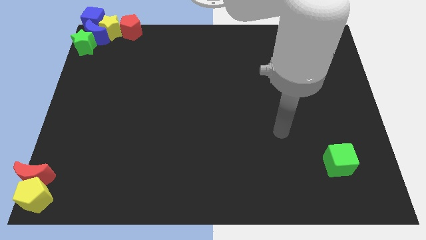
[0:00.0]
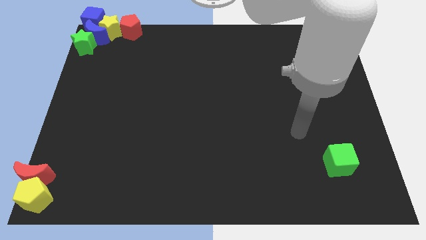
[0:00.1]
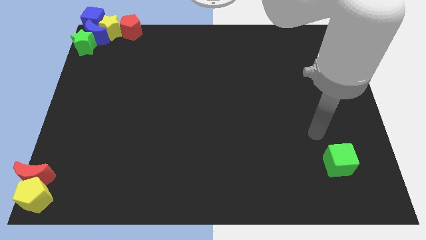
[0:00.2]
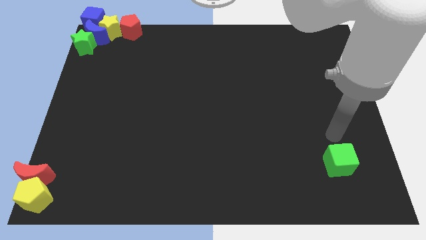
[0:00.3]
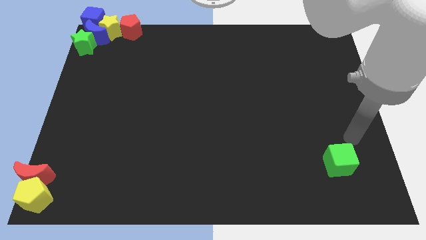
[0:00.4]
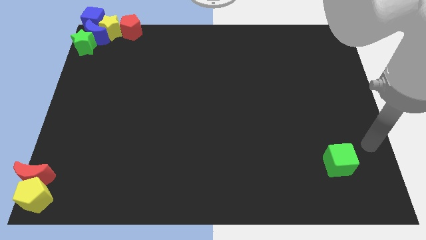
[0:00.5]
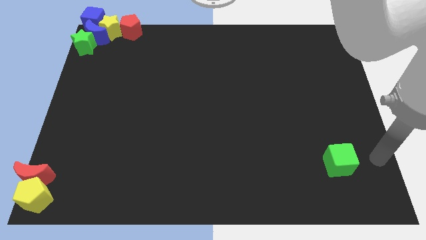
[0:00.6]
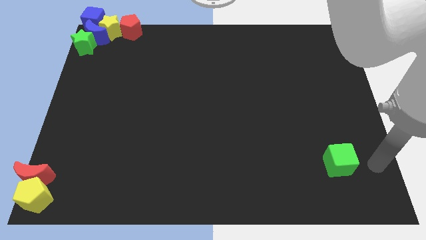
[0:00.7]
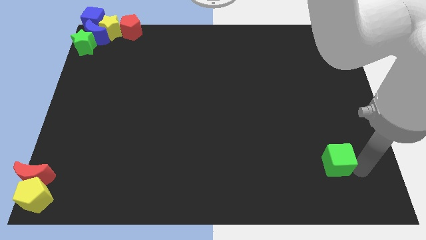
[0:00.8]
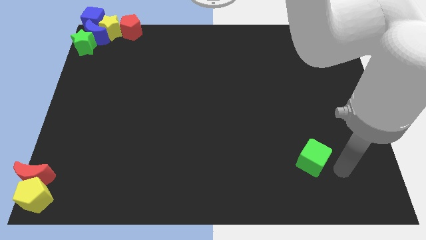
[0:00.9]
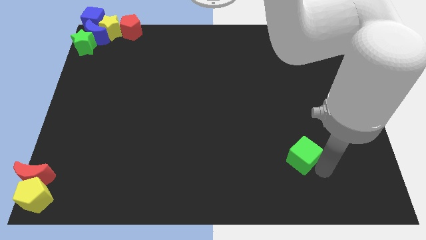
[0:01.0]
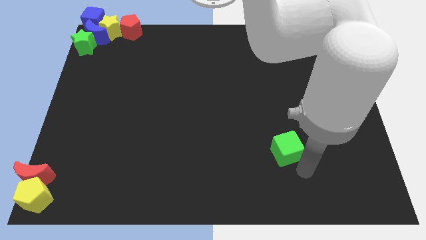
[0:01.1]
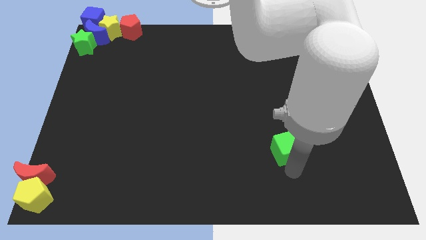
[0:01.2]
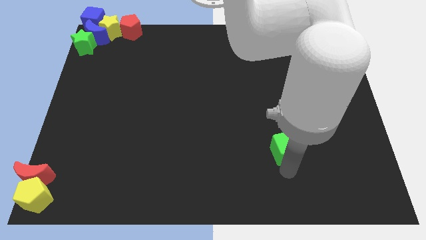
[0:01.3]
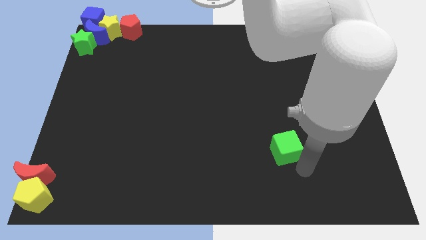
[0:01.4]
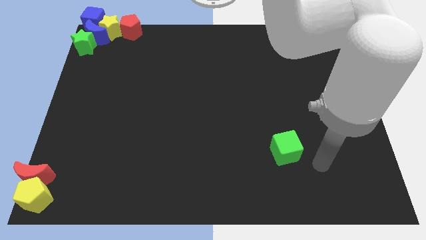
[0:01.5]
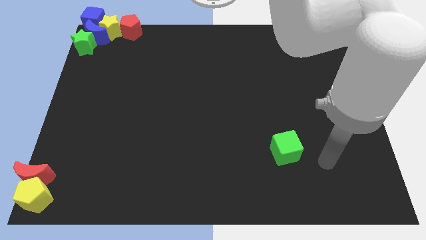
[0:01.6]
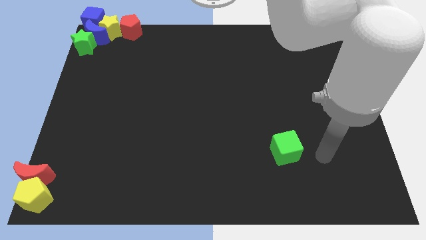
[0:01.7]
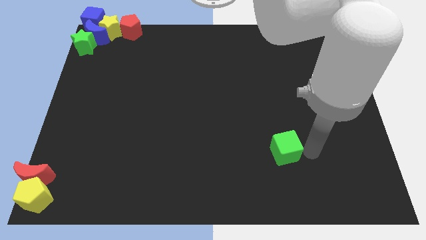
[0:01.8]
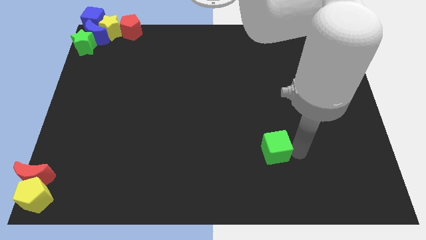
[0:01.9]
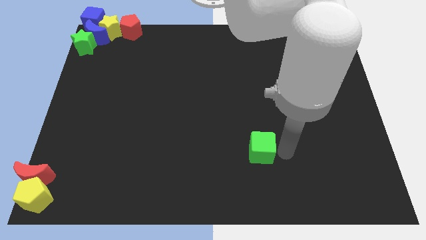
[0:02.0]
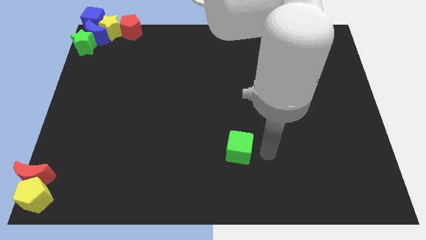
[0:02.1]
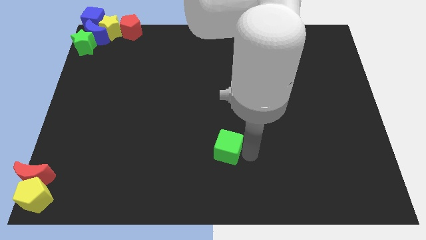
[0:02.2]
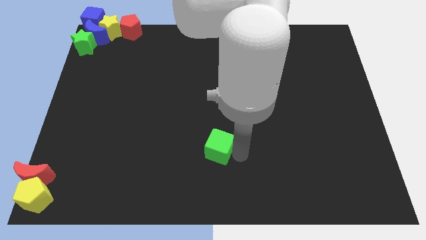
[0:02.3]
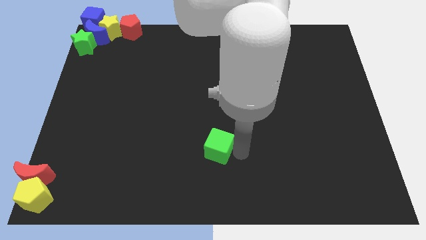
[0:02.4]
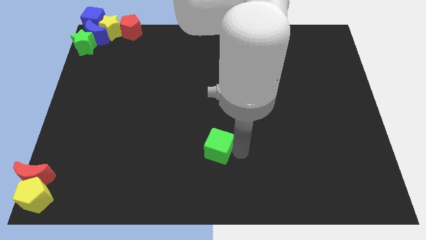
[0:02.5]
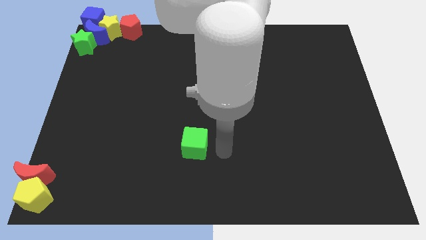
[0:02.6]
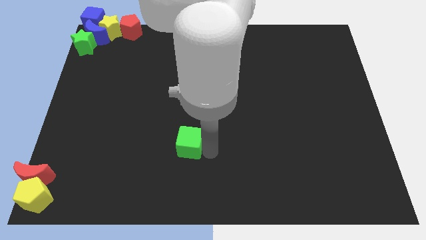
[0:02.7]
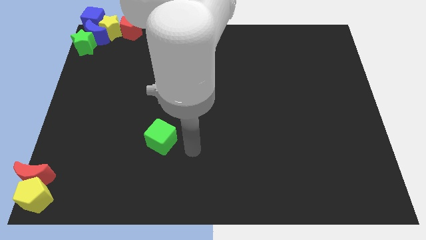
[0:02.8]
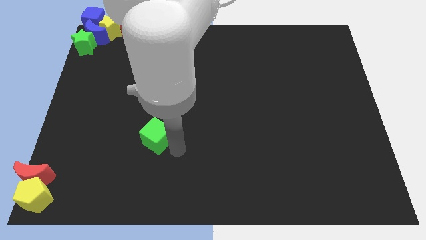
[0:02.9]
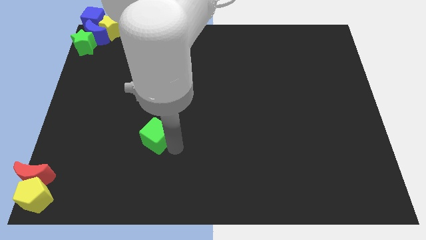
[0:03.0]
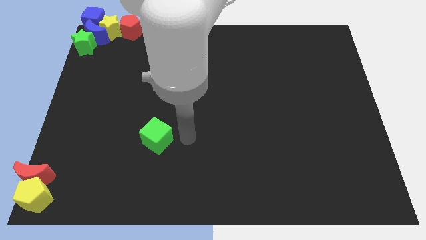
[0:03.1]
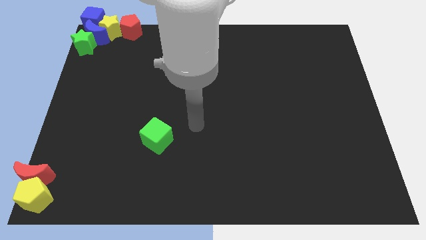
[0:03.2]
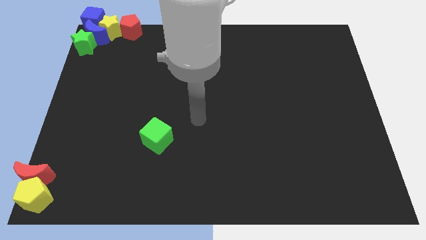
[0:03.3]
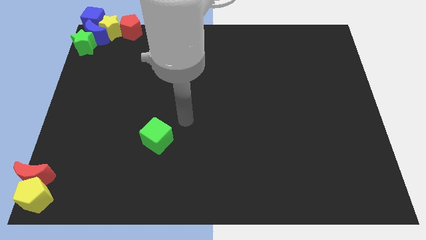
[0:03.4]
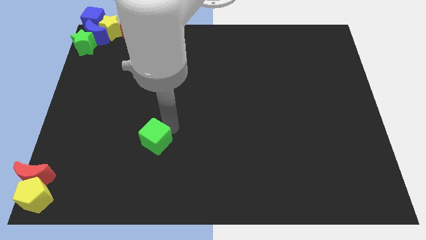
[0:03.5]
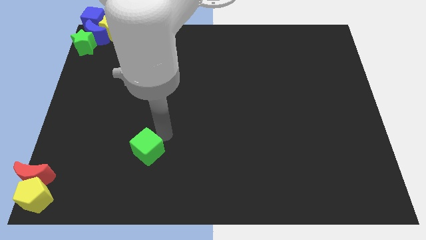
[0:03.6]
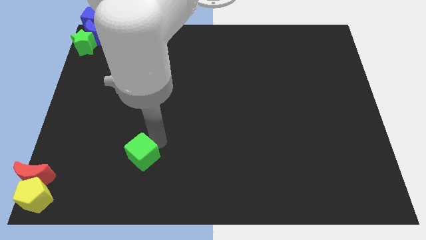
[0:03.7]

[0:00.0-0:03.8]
move the green cube towards the left side

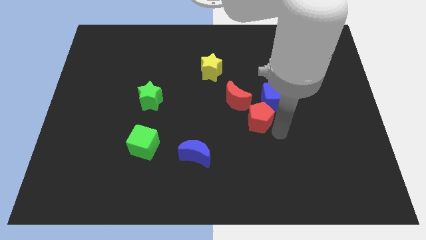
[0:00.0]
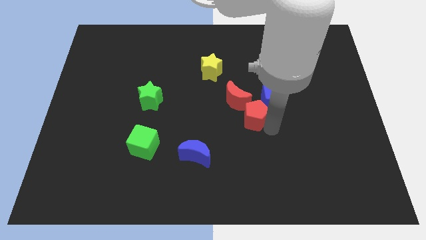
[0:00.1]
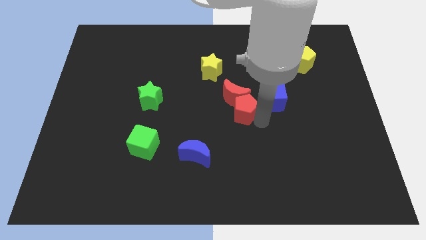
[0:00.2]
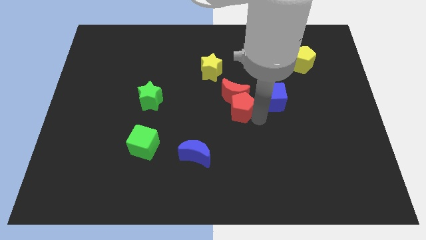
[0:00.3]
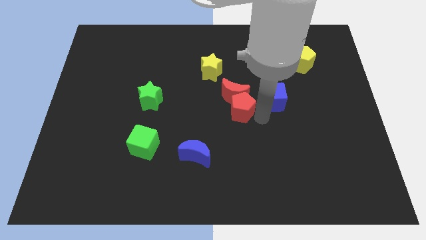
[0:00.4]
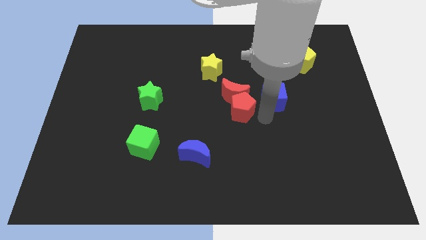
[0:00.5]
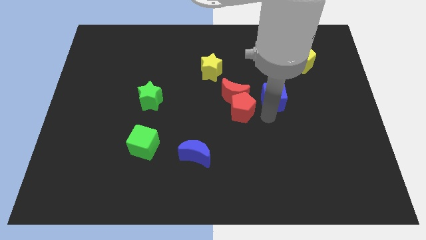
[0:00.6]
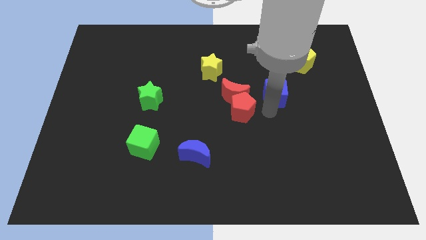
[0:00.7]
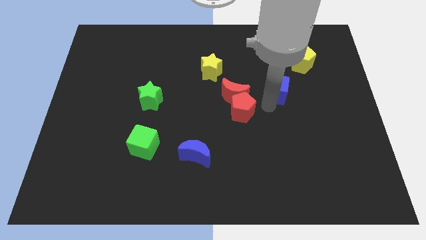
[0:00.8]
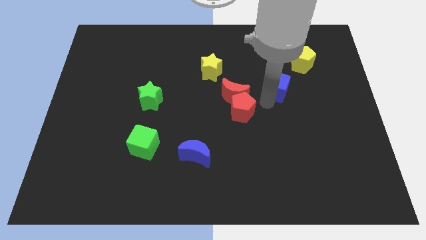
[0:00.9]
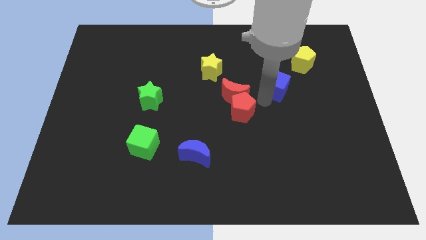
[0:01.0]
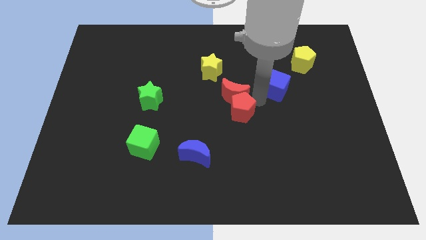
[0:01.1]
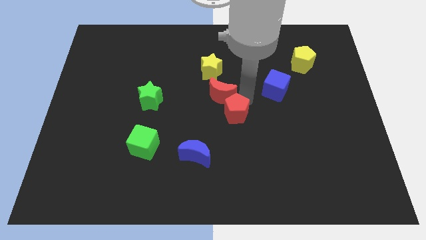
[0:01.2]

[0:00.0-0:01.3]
separate the red pentagon from the blue cube

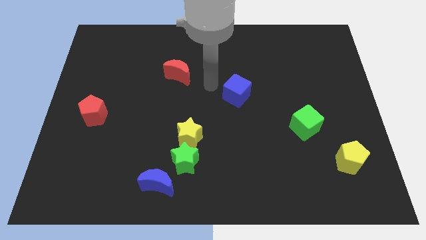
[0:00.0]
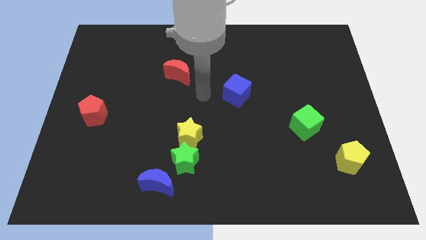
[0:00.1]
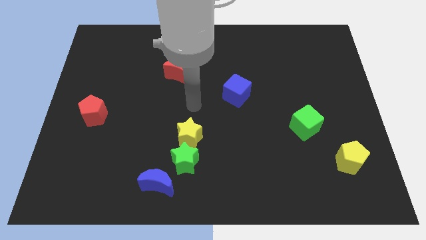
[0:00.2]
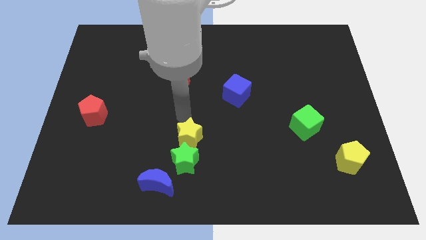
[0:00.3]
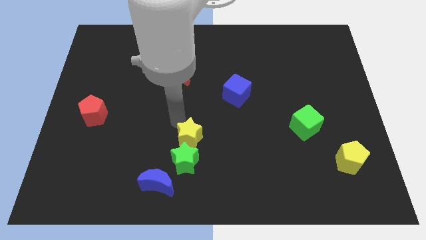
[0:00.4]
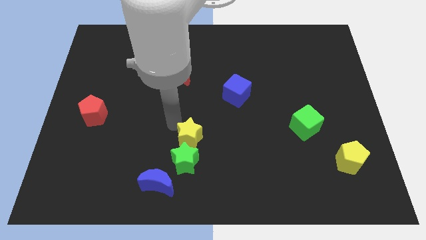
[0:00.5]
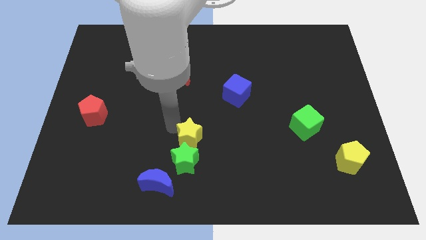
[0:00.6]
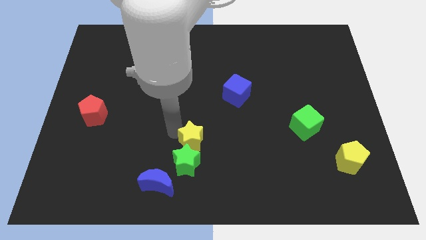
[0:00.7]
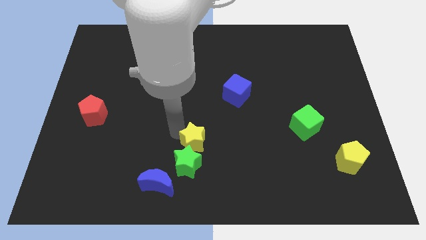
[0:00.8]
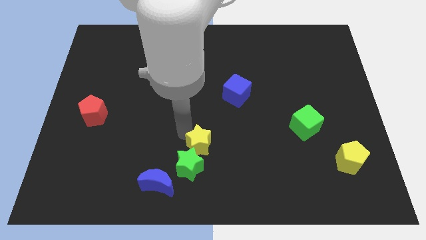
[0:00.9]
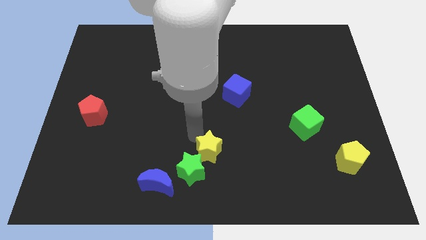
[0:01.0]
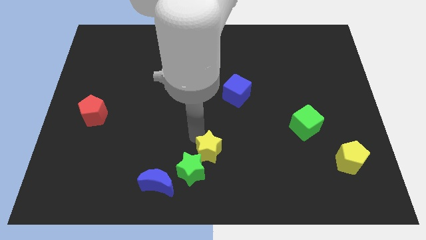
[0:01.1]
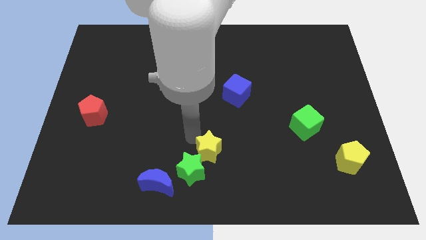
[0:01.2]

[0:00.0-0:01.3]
push the yellow star into the green star

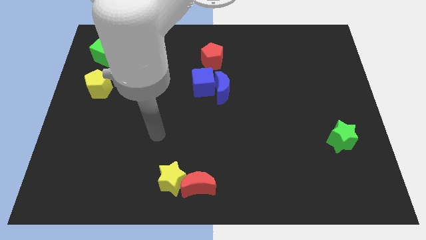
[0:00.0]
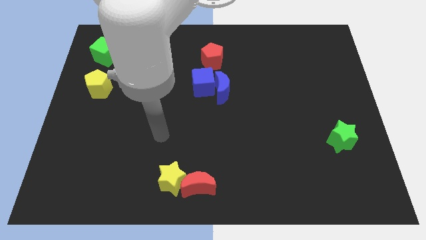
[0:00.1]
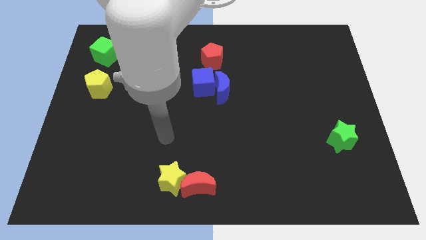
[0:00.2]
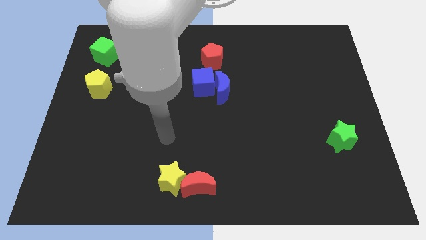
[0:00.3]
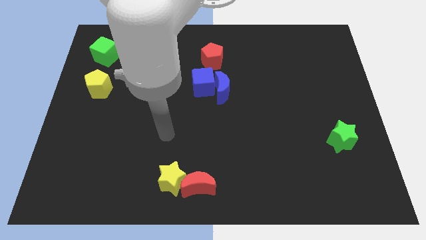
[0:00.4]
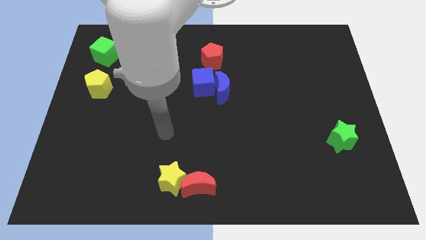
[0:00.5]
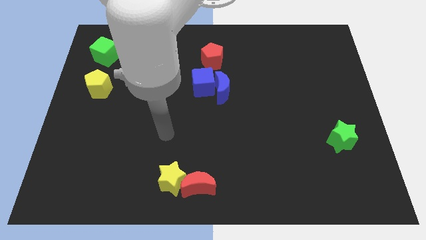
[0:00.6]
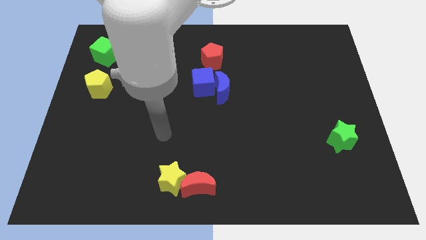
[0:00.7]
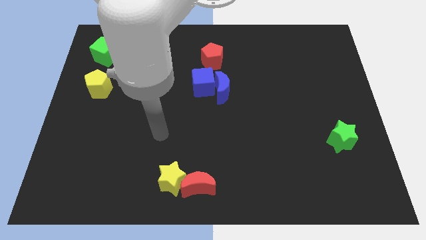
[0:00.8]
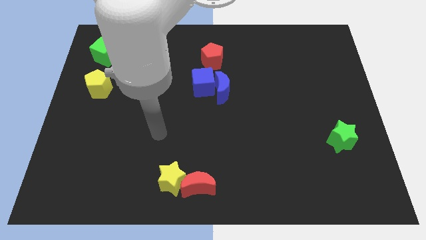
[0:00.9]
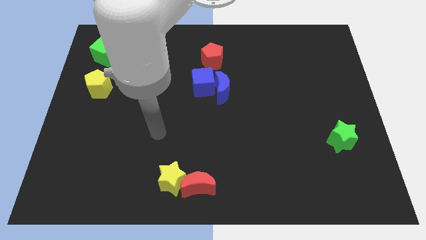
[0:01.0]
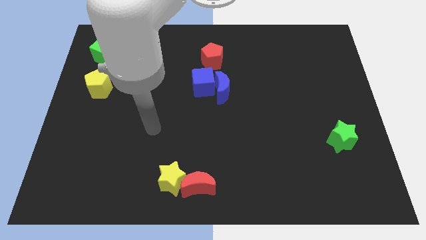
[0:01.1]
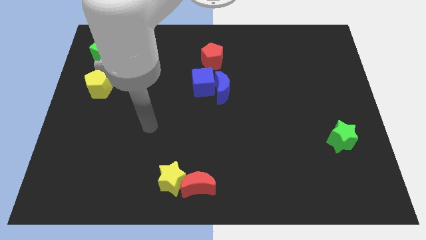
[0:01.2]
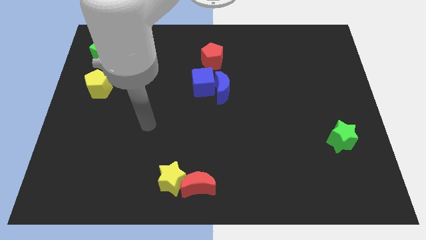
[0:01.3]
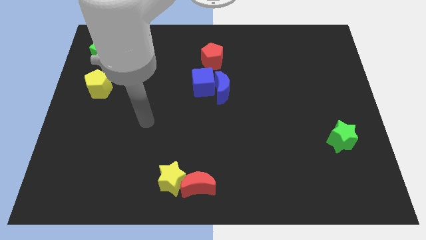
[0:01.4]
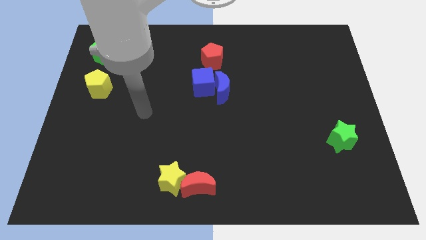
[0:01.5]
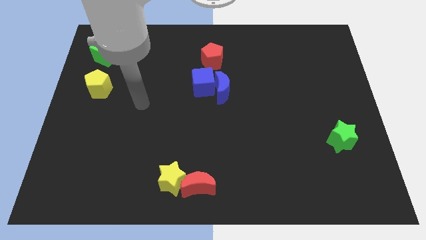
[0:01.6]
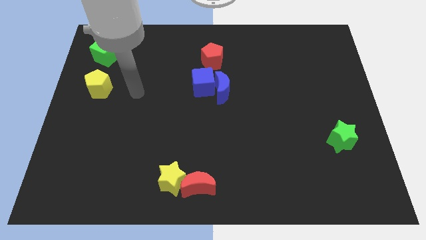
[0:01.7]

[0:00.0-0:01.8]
move your arm in between the yellow pentagon and blue cube

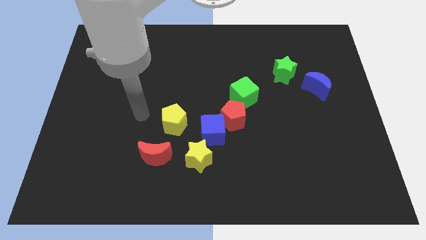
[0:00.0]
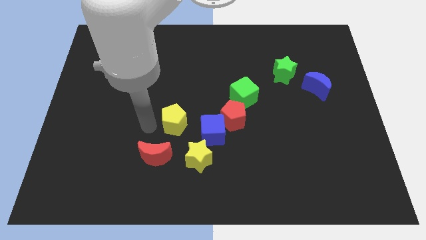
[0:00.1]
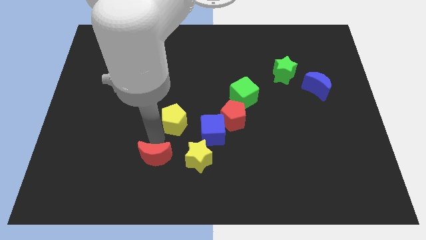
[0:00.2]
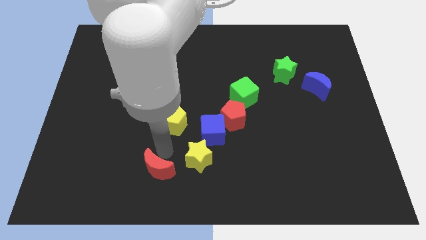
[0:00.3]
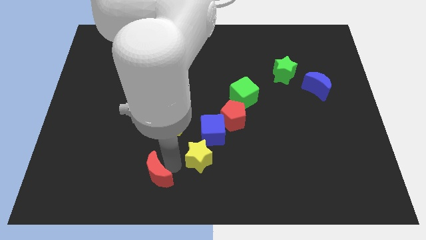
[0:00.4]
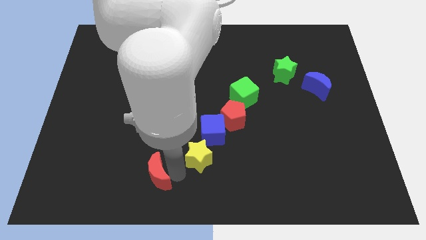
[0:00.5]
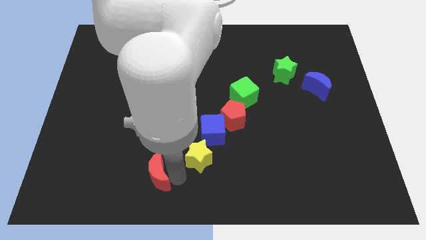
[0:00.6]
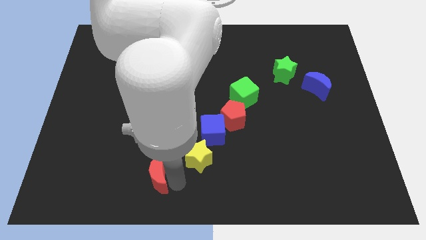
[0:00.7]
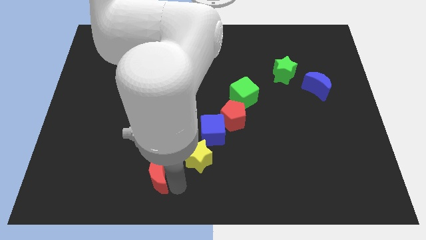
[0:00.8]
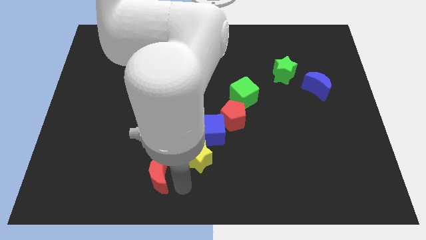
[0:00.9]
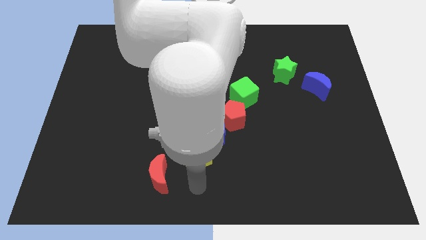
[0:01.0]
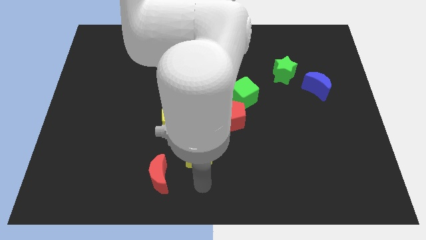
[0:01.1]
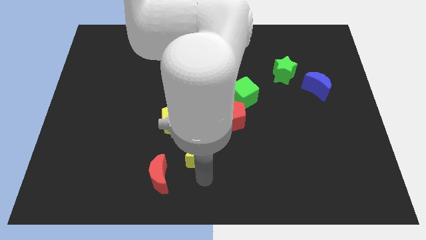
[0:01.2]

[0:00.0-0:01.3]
push the red moon downwards
